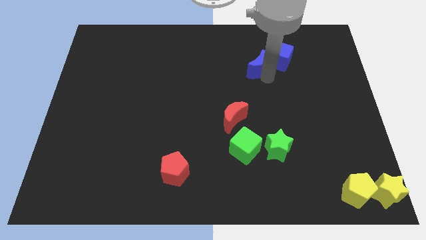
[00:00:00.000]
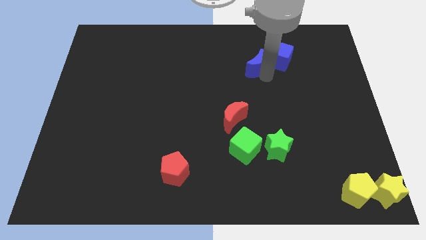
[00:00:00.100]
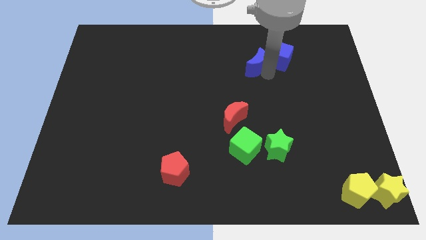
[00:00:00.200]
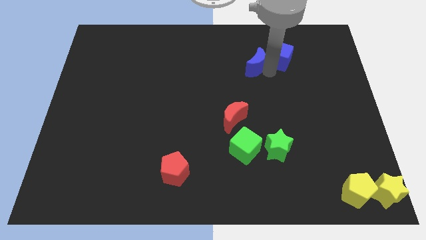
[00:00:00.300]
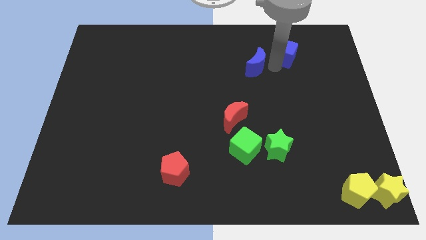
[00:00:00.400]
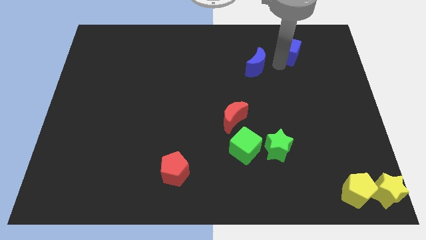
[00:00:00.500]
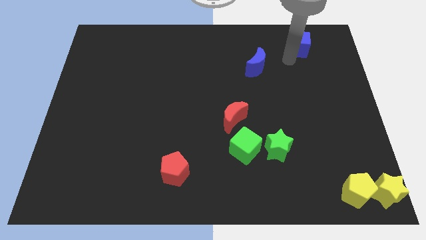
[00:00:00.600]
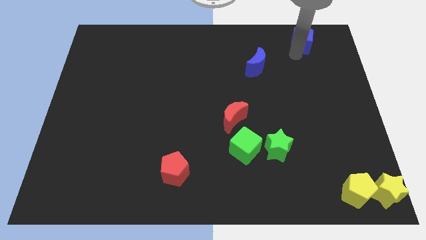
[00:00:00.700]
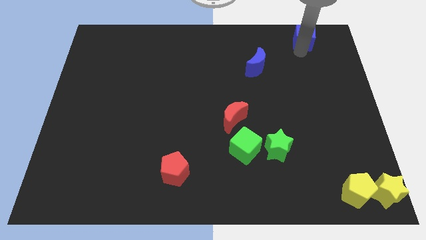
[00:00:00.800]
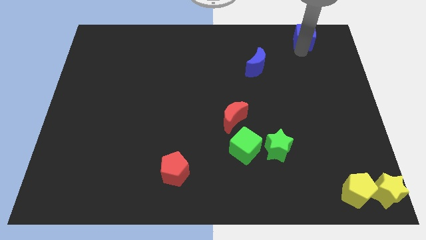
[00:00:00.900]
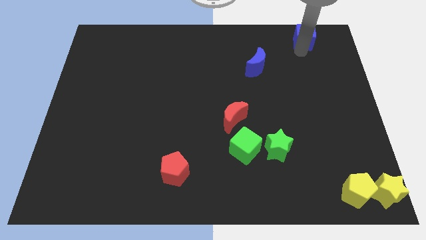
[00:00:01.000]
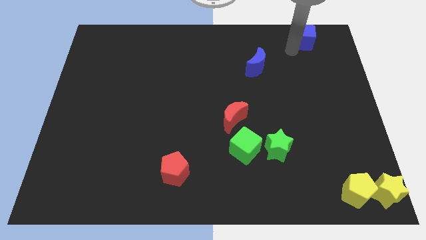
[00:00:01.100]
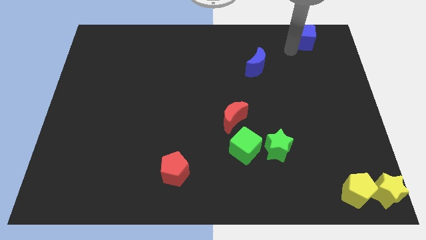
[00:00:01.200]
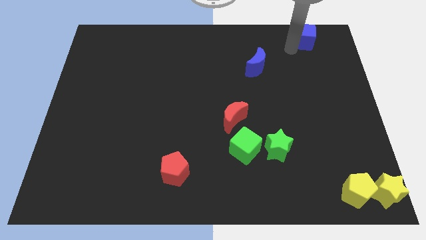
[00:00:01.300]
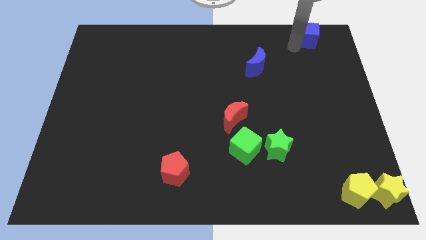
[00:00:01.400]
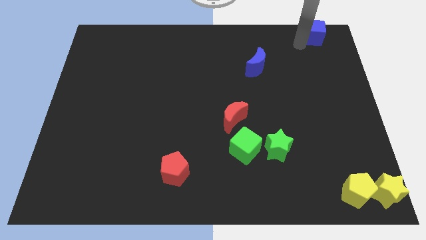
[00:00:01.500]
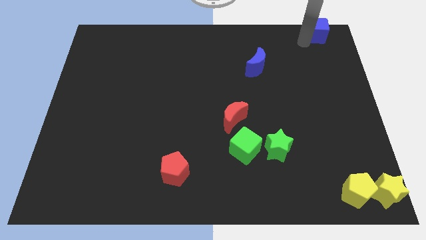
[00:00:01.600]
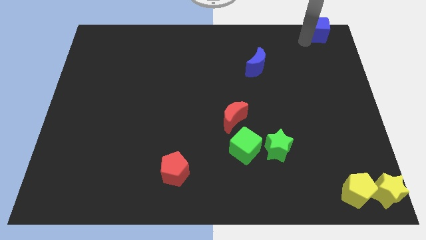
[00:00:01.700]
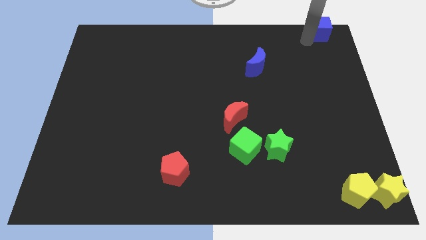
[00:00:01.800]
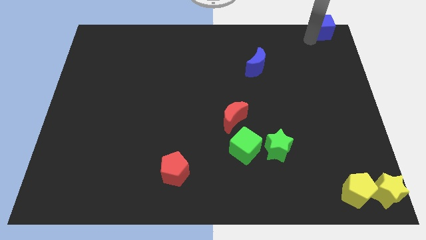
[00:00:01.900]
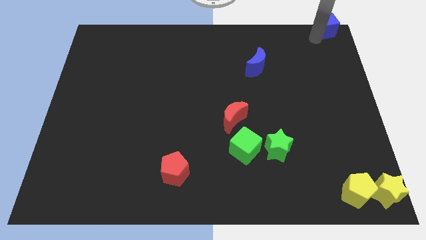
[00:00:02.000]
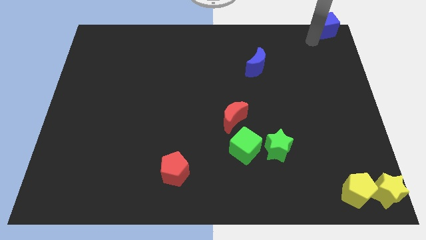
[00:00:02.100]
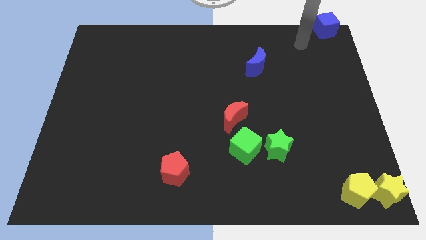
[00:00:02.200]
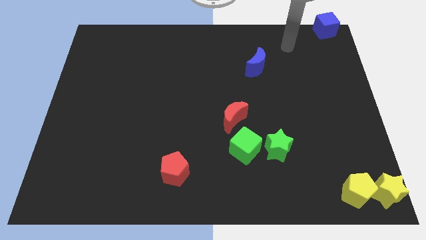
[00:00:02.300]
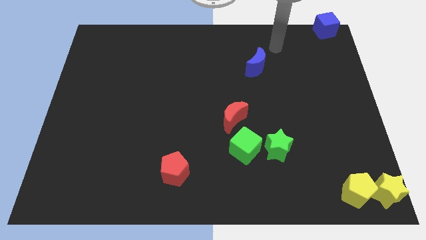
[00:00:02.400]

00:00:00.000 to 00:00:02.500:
push the blue cube to top right corner of the board

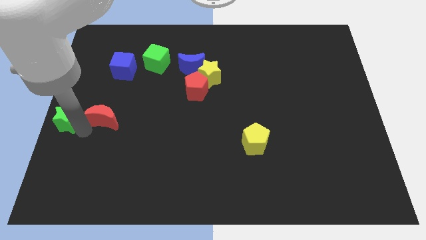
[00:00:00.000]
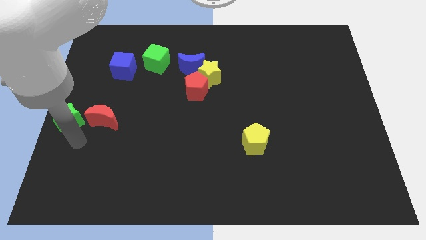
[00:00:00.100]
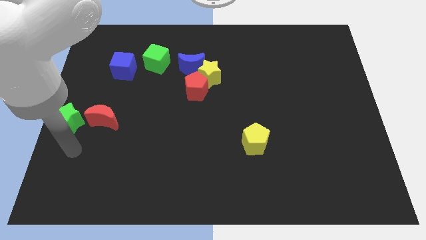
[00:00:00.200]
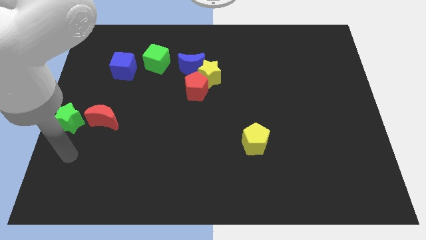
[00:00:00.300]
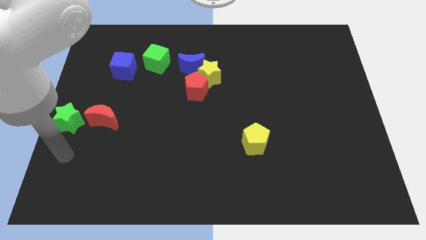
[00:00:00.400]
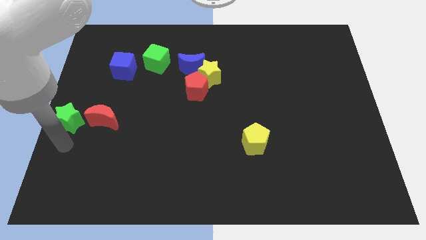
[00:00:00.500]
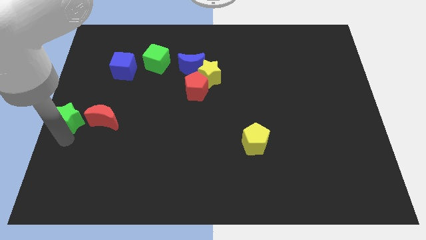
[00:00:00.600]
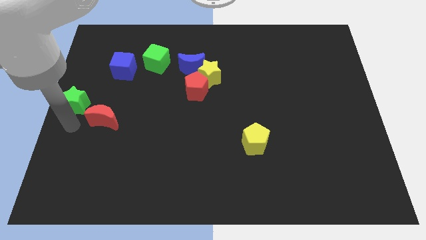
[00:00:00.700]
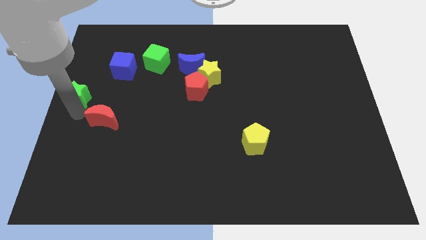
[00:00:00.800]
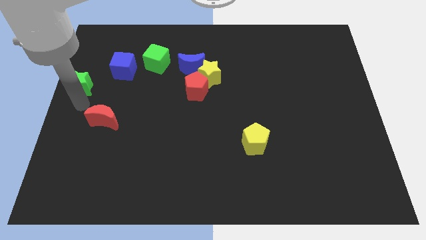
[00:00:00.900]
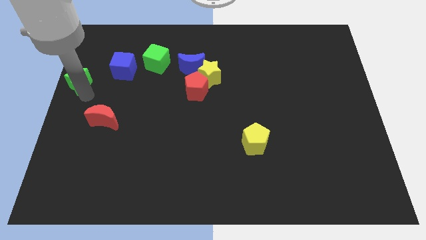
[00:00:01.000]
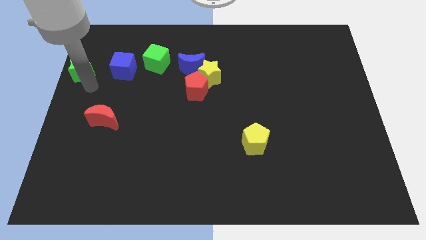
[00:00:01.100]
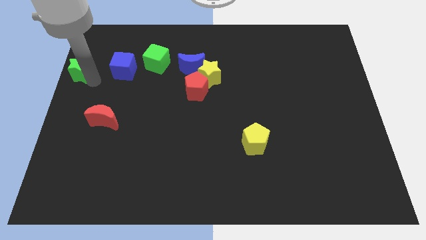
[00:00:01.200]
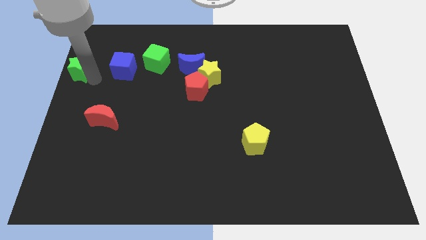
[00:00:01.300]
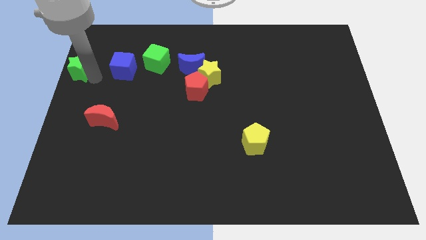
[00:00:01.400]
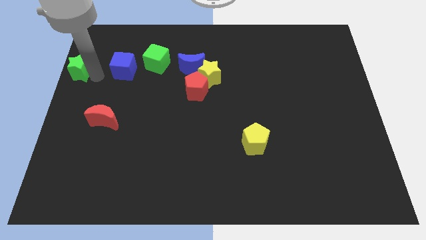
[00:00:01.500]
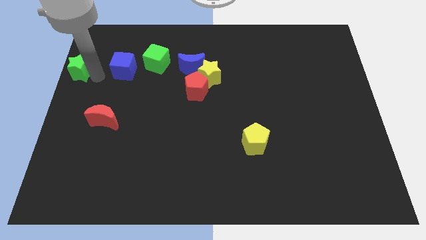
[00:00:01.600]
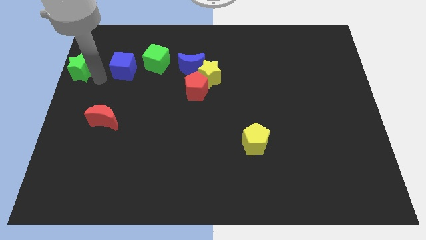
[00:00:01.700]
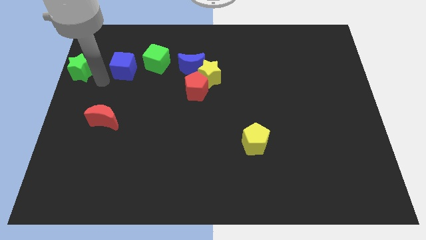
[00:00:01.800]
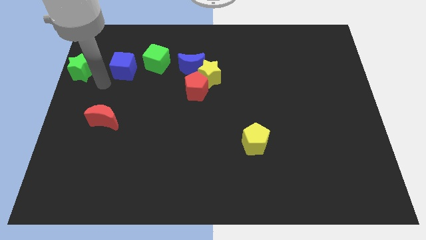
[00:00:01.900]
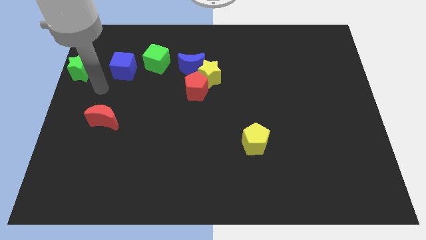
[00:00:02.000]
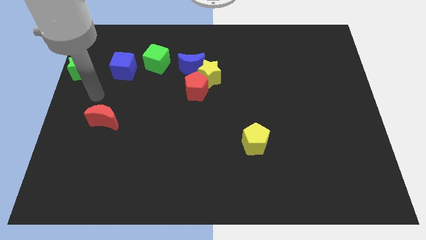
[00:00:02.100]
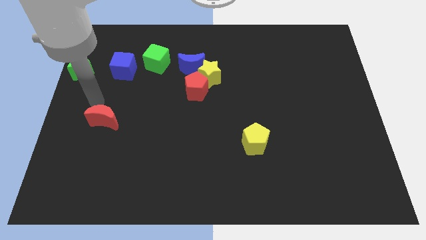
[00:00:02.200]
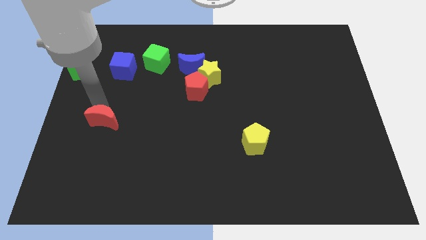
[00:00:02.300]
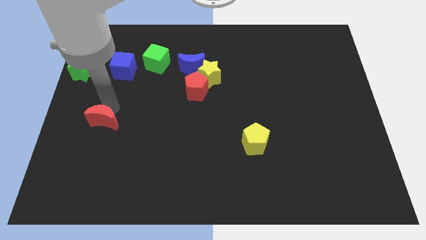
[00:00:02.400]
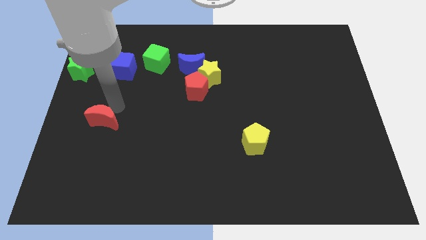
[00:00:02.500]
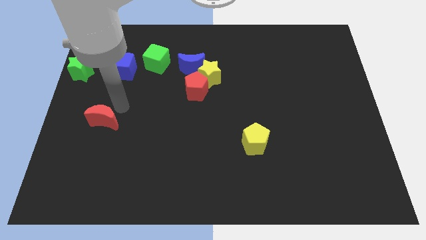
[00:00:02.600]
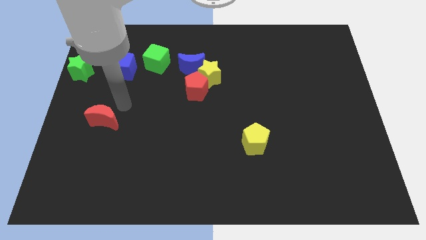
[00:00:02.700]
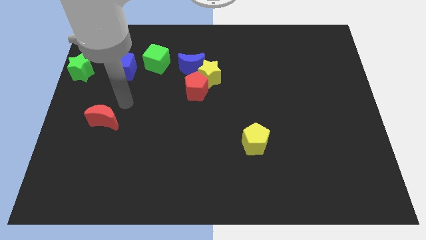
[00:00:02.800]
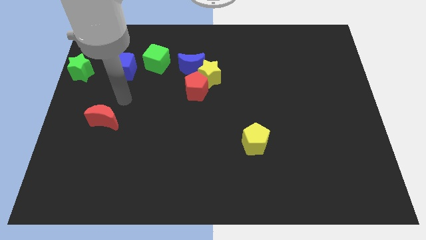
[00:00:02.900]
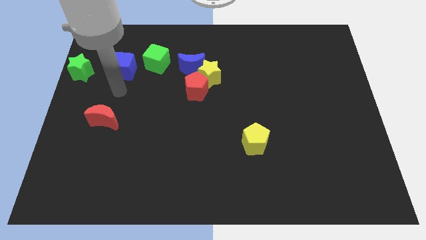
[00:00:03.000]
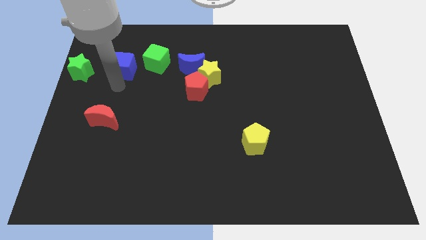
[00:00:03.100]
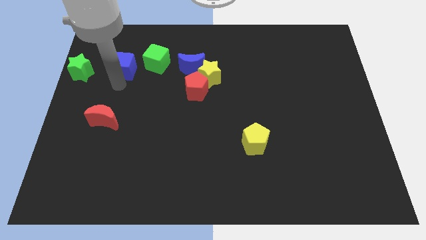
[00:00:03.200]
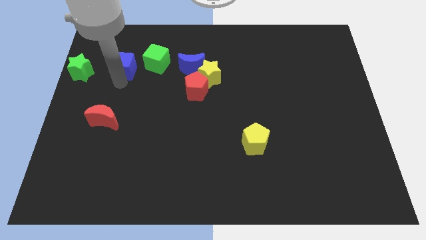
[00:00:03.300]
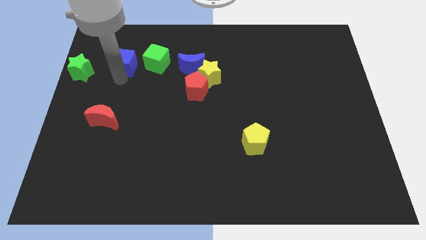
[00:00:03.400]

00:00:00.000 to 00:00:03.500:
push the green star towards the top side of the board

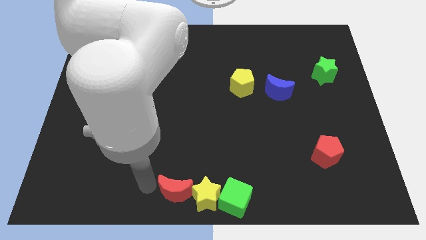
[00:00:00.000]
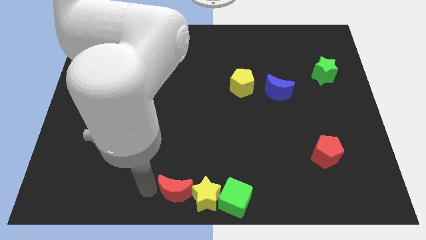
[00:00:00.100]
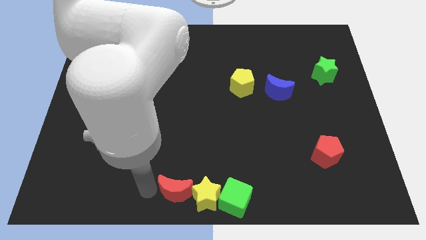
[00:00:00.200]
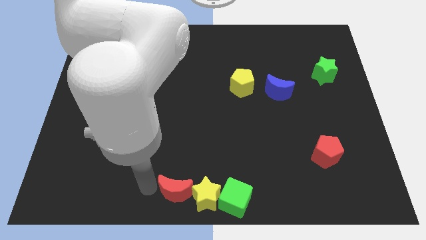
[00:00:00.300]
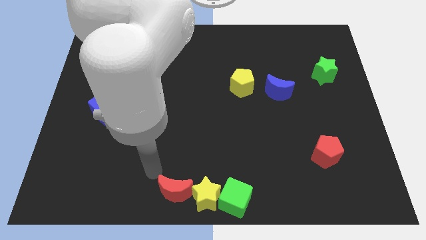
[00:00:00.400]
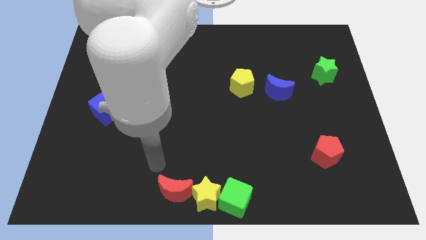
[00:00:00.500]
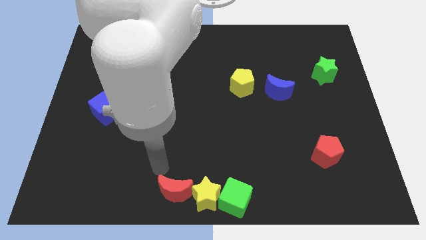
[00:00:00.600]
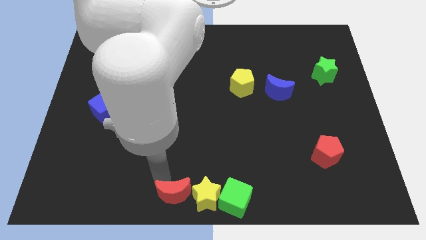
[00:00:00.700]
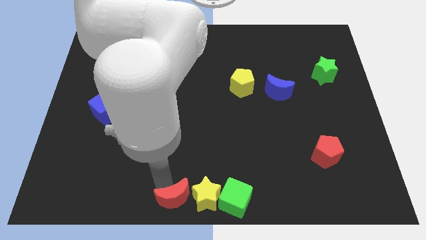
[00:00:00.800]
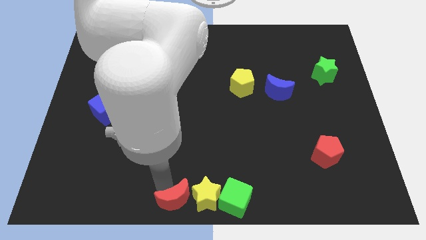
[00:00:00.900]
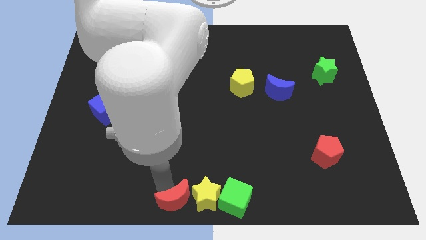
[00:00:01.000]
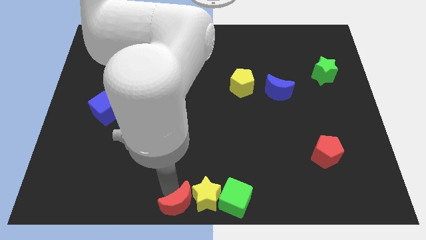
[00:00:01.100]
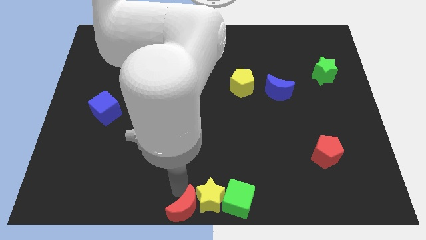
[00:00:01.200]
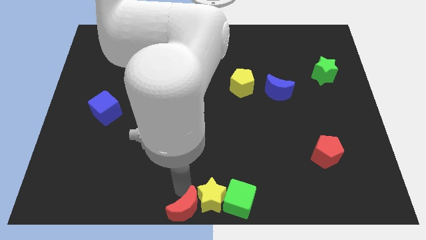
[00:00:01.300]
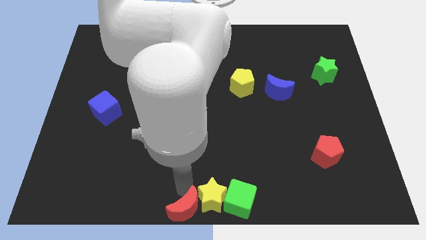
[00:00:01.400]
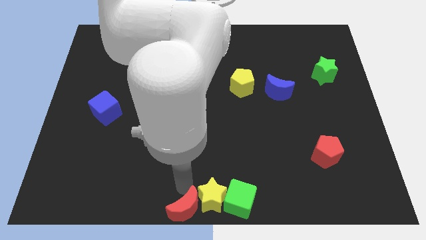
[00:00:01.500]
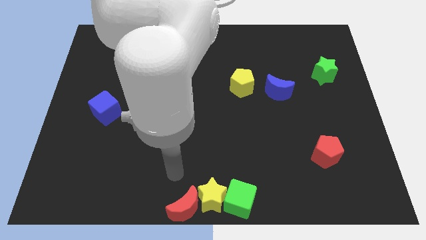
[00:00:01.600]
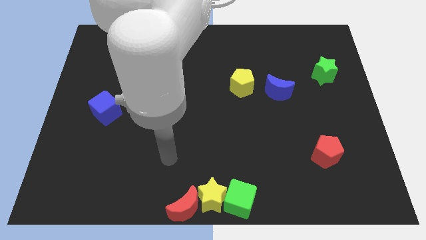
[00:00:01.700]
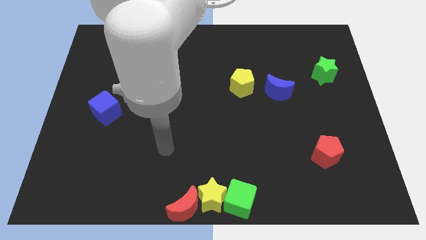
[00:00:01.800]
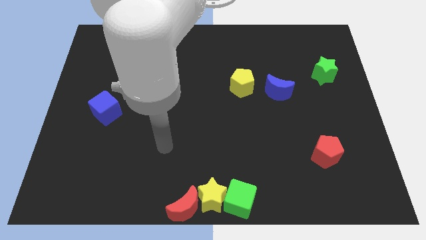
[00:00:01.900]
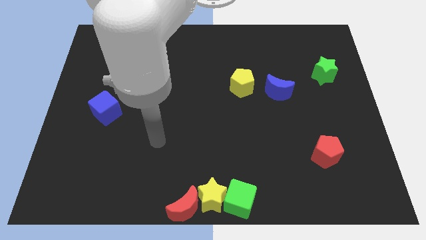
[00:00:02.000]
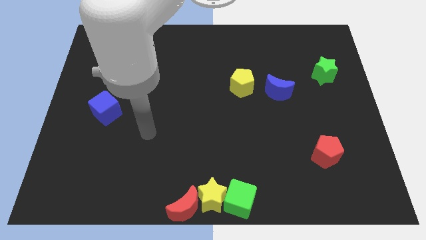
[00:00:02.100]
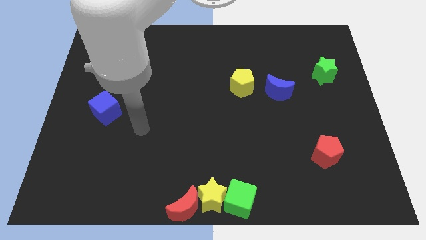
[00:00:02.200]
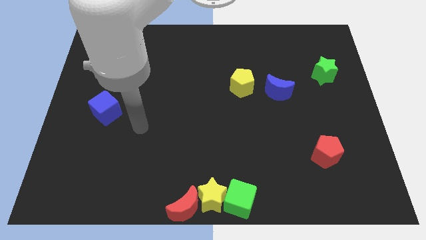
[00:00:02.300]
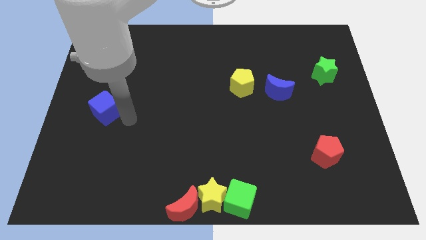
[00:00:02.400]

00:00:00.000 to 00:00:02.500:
move your arm close to the blue cube

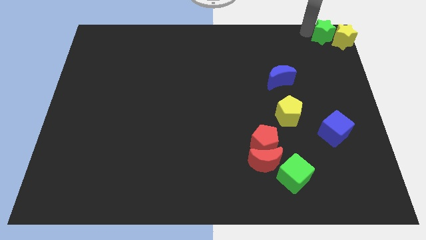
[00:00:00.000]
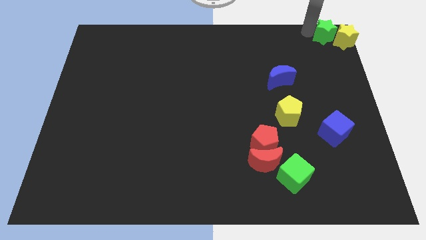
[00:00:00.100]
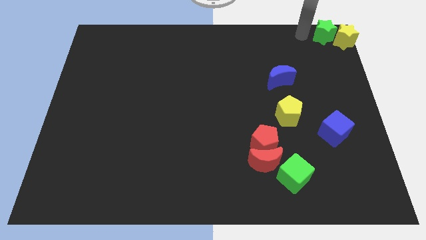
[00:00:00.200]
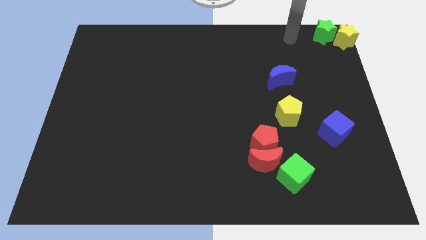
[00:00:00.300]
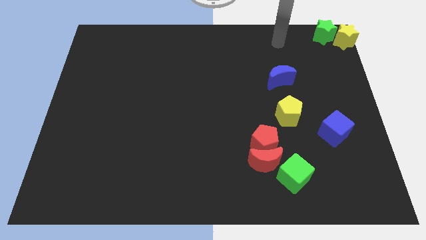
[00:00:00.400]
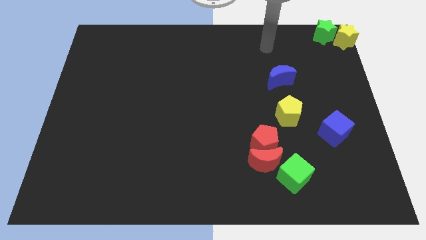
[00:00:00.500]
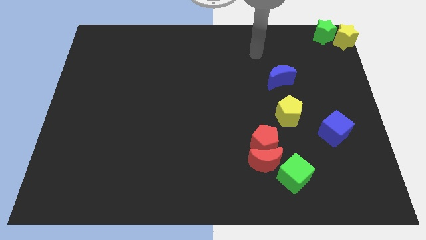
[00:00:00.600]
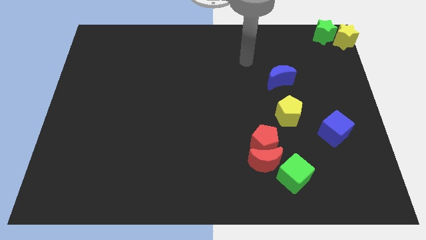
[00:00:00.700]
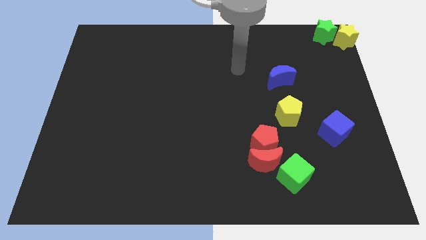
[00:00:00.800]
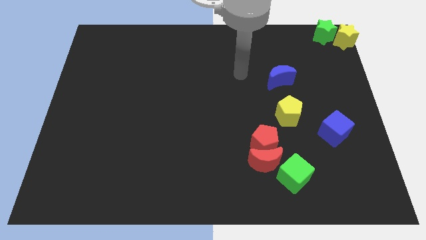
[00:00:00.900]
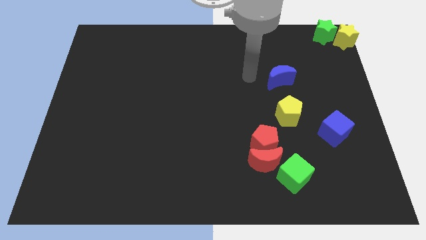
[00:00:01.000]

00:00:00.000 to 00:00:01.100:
move your hand away from green star
